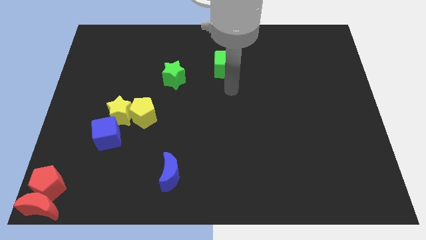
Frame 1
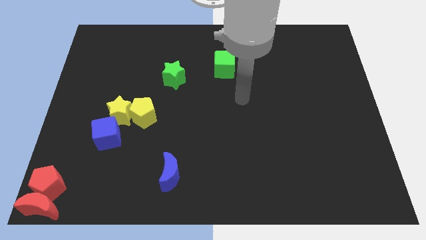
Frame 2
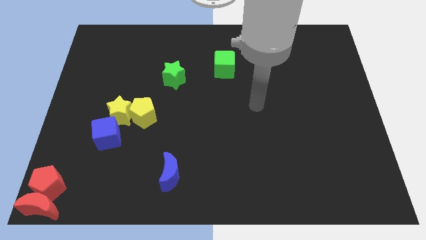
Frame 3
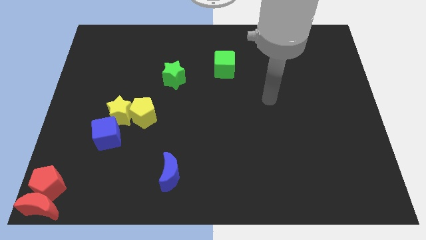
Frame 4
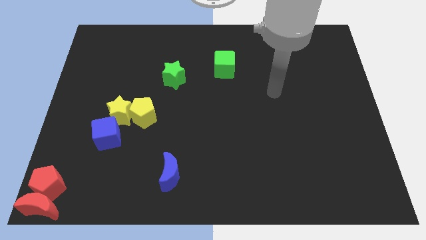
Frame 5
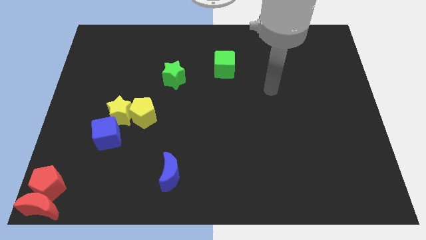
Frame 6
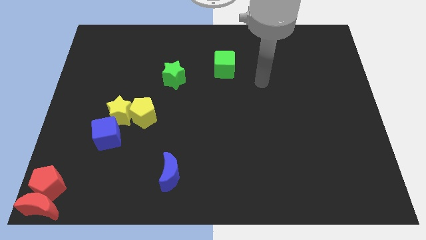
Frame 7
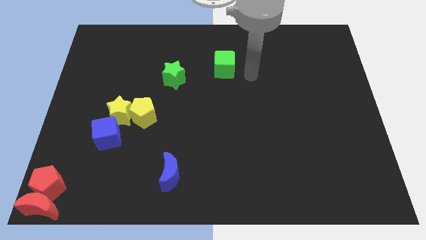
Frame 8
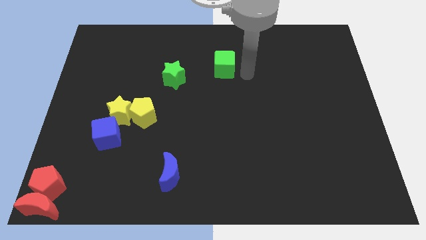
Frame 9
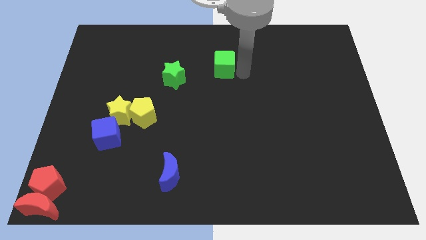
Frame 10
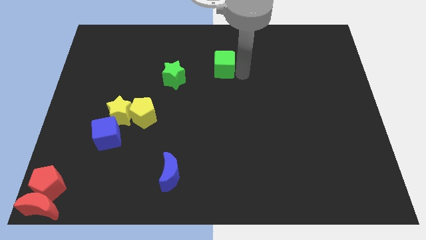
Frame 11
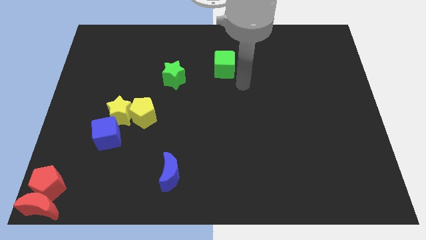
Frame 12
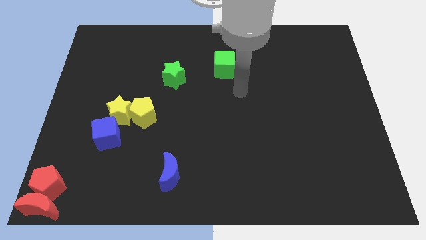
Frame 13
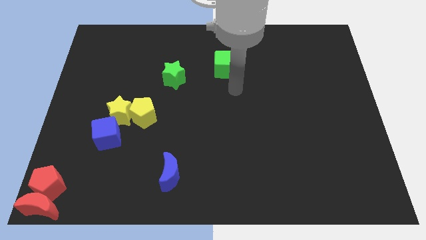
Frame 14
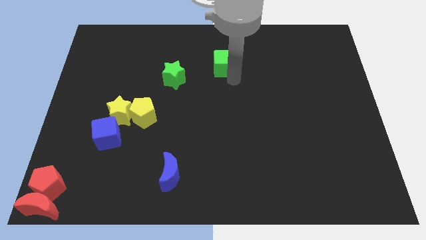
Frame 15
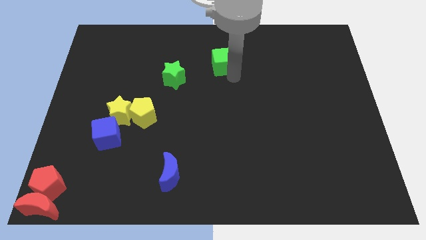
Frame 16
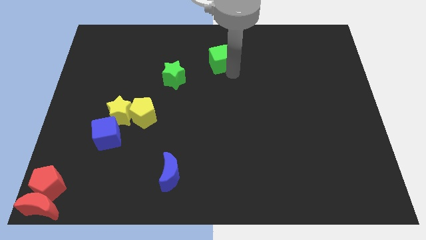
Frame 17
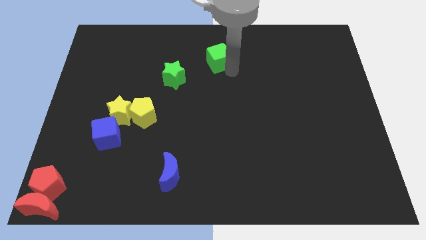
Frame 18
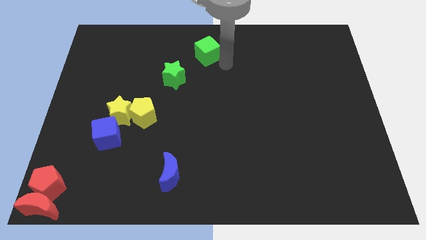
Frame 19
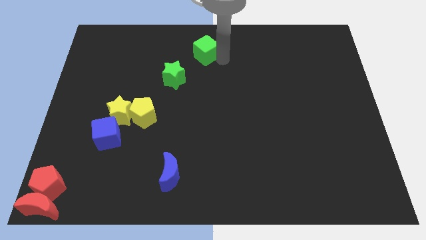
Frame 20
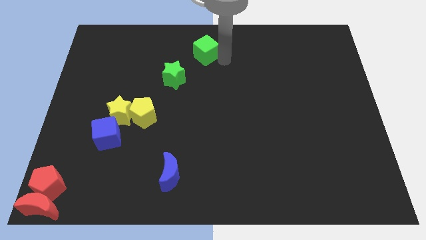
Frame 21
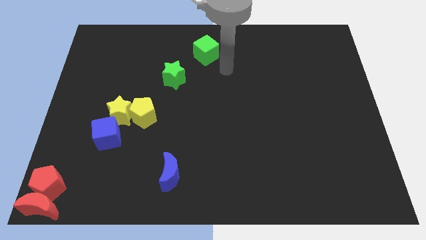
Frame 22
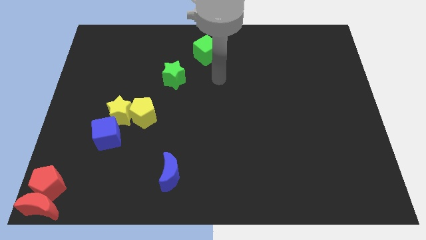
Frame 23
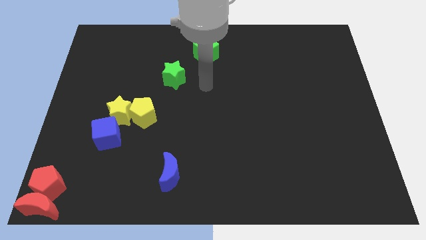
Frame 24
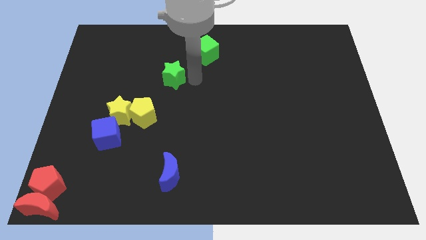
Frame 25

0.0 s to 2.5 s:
push the green cube to the top center

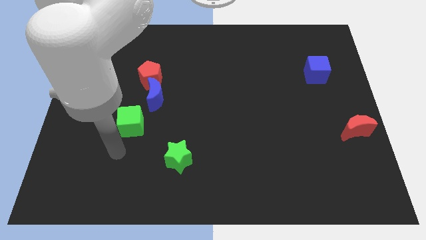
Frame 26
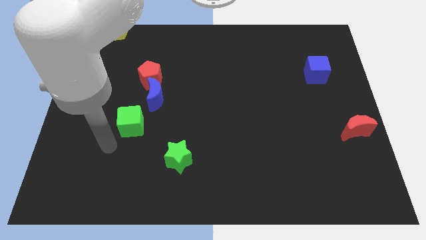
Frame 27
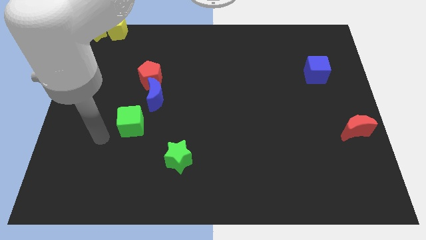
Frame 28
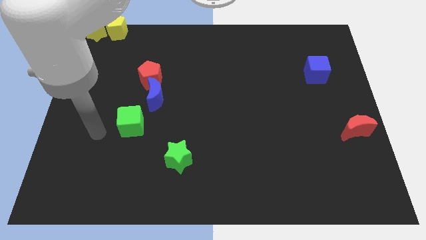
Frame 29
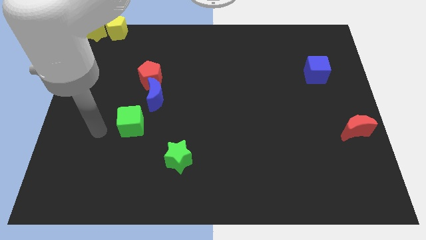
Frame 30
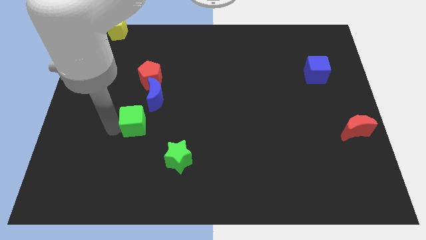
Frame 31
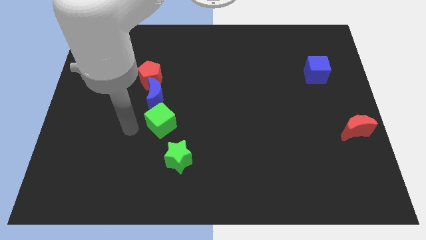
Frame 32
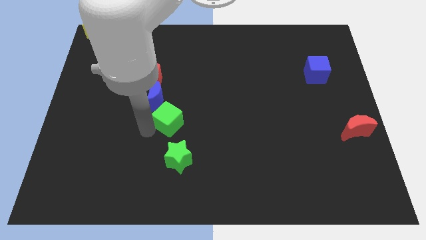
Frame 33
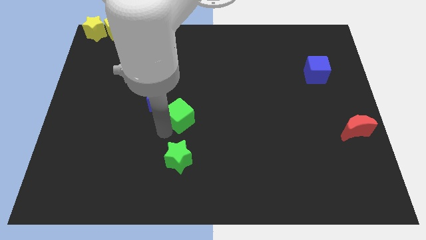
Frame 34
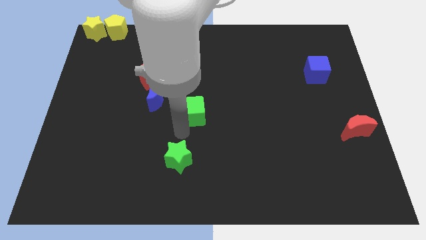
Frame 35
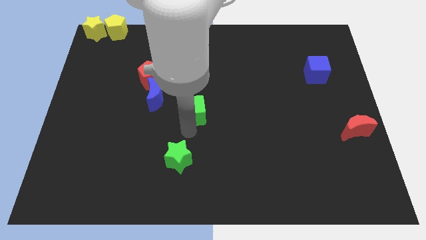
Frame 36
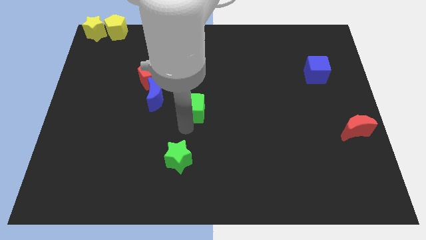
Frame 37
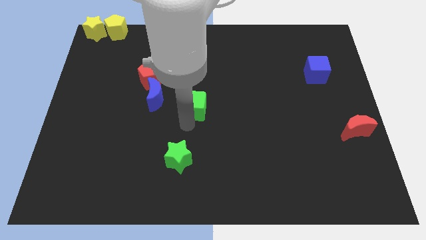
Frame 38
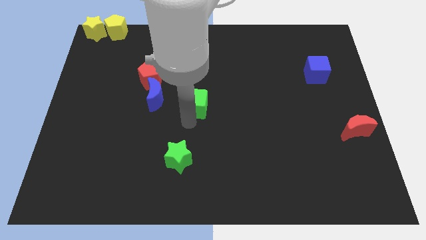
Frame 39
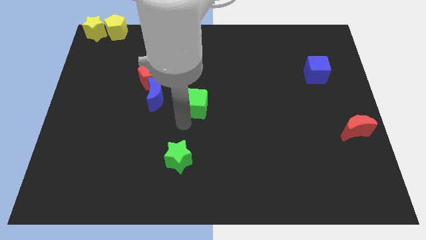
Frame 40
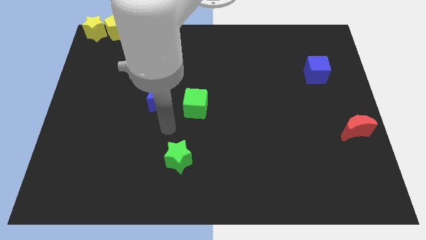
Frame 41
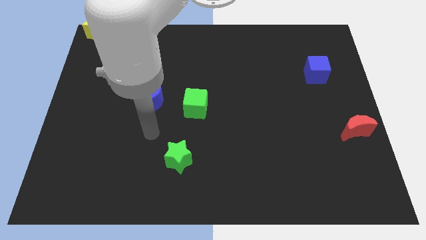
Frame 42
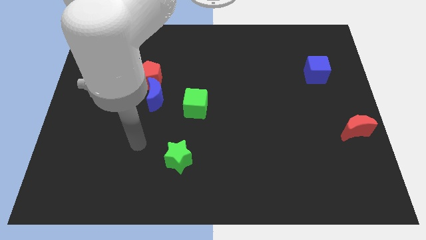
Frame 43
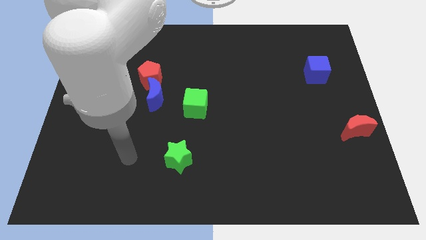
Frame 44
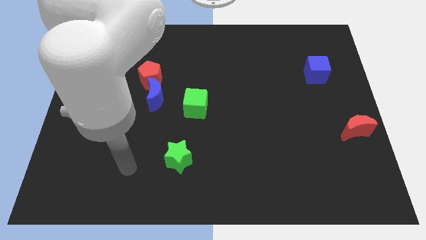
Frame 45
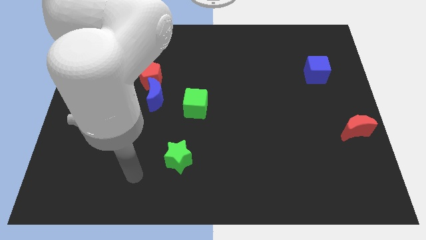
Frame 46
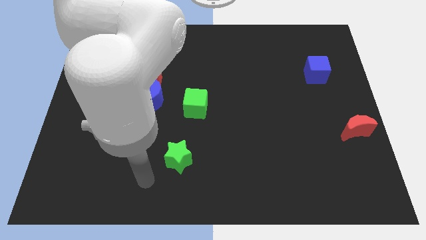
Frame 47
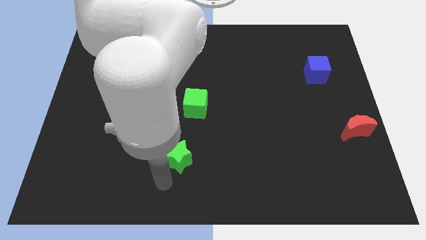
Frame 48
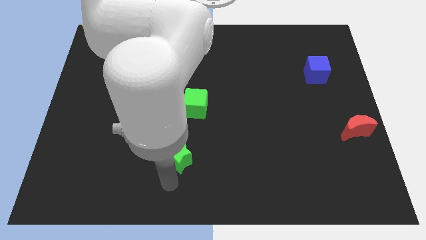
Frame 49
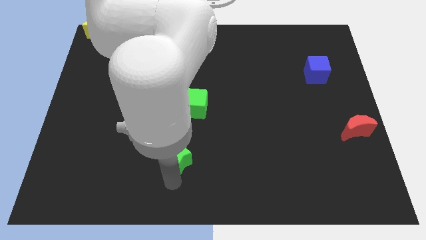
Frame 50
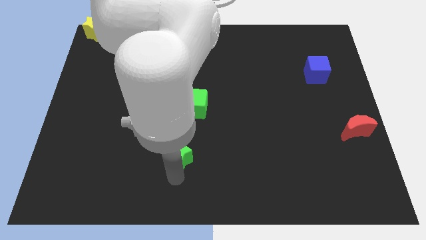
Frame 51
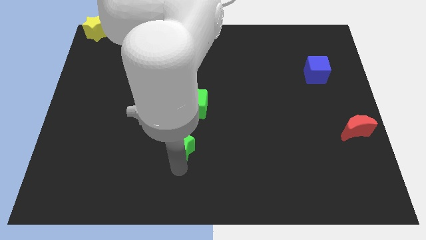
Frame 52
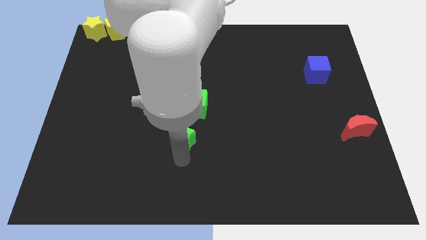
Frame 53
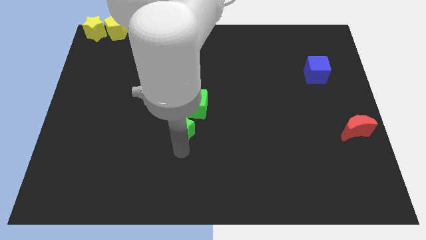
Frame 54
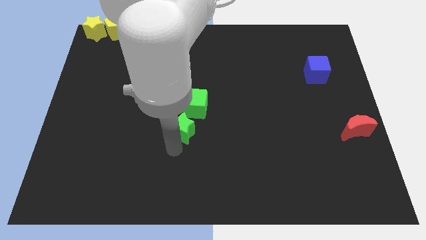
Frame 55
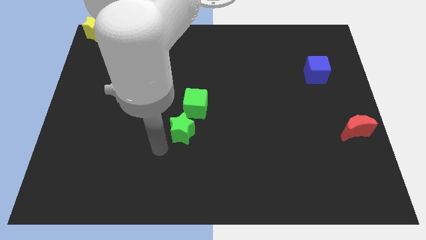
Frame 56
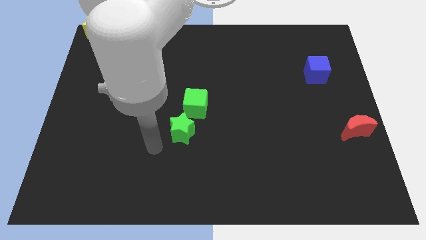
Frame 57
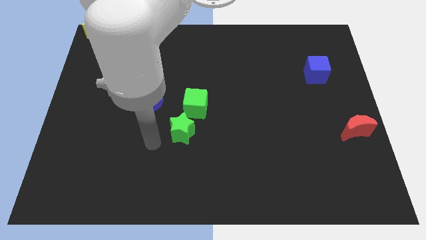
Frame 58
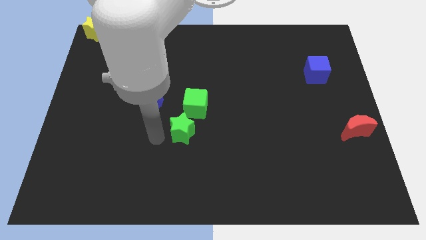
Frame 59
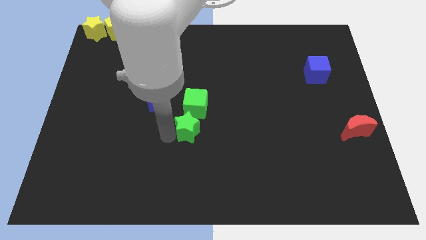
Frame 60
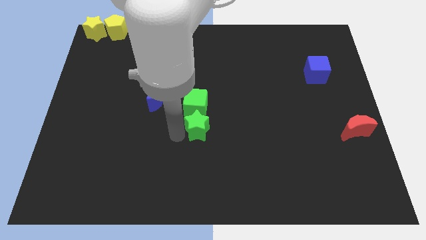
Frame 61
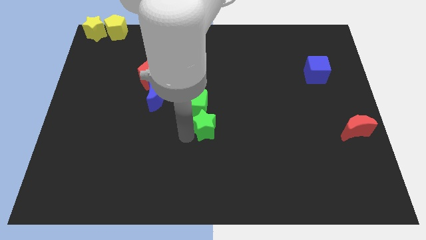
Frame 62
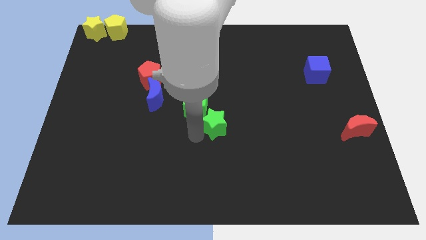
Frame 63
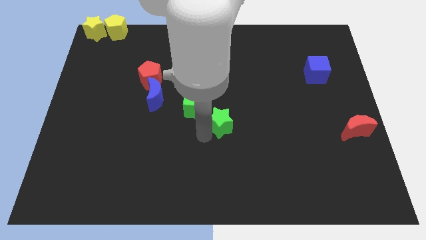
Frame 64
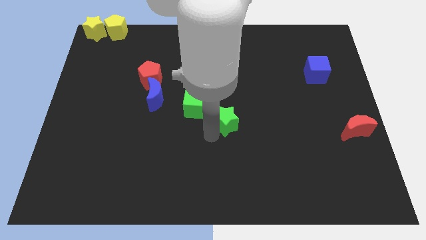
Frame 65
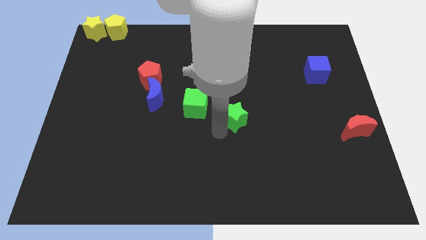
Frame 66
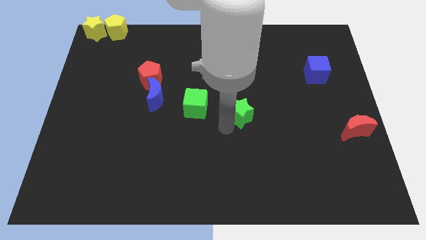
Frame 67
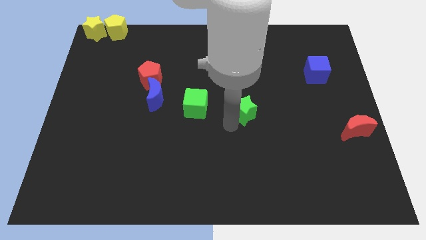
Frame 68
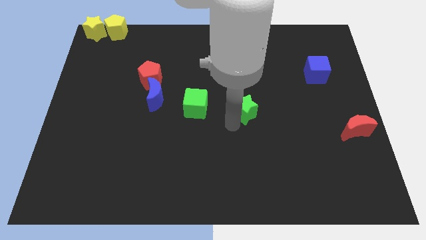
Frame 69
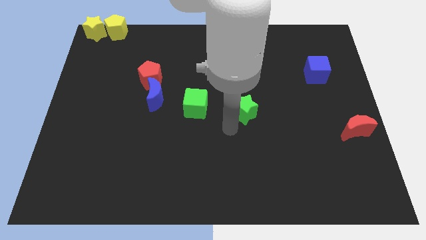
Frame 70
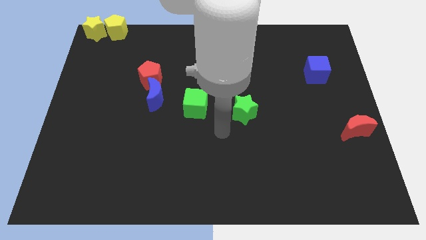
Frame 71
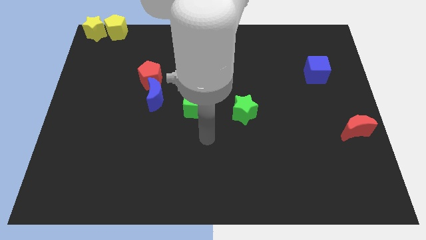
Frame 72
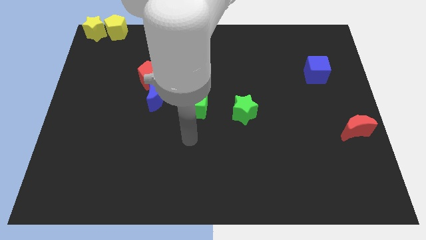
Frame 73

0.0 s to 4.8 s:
place the green blocks to the center of the board

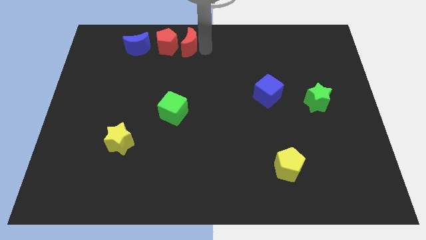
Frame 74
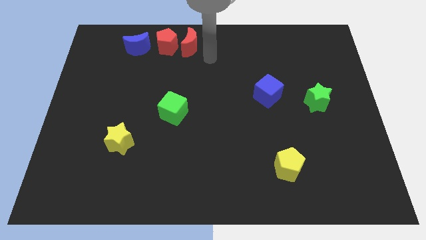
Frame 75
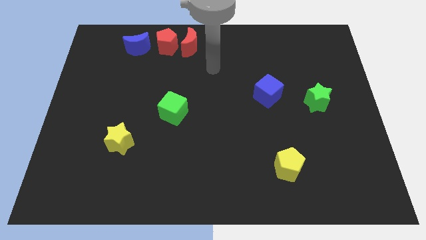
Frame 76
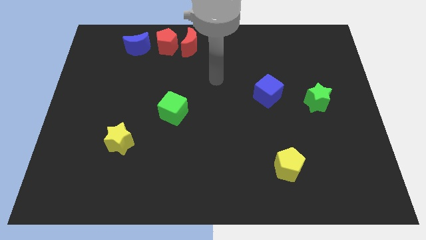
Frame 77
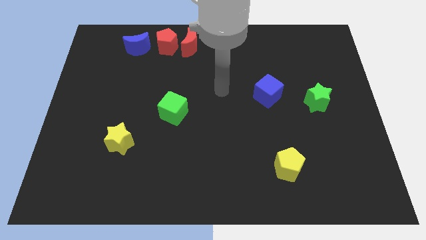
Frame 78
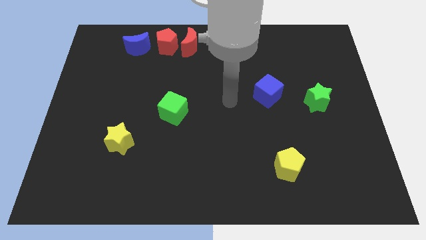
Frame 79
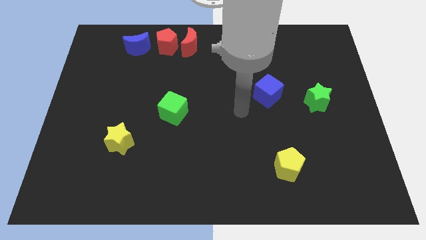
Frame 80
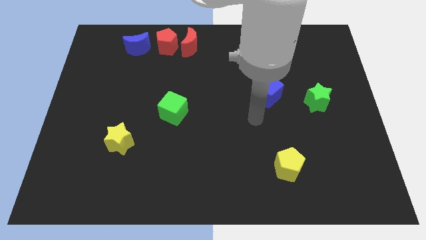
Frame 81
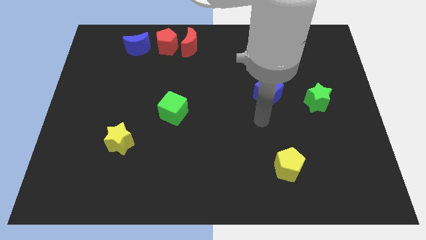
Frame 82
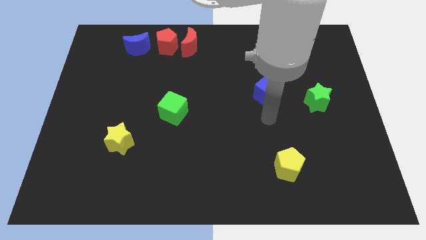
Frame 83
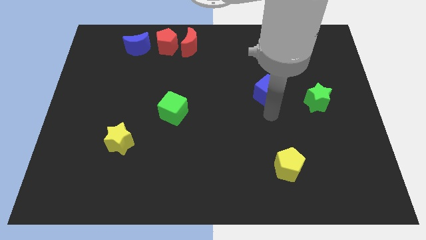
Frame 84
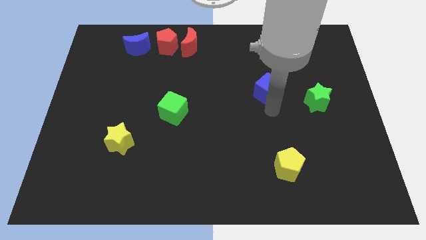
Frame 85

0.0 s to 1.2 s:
move your arm to the bottom of the blue cube

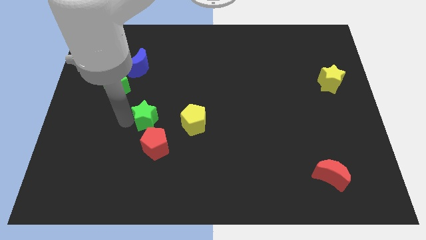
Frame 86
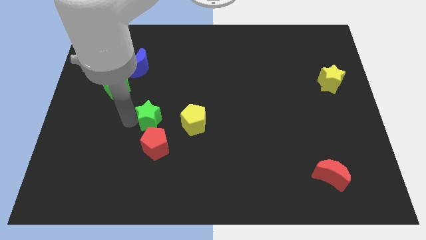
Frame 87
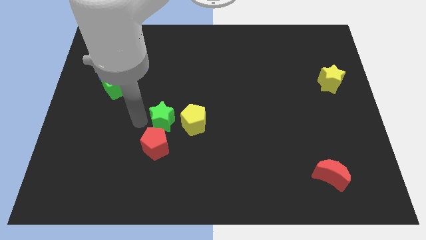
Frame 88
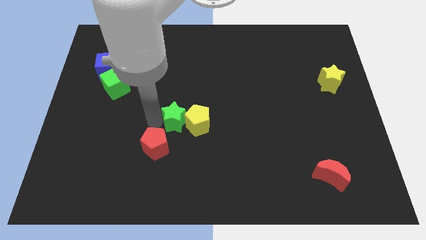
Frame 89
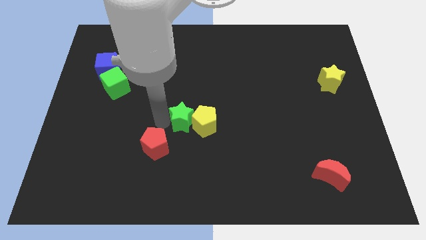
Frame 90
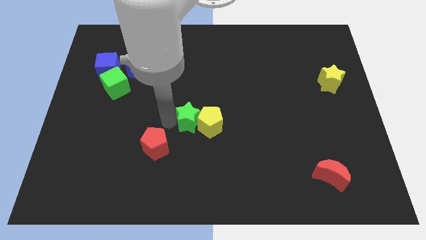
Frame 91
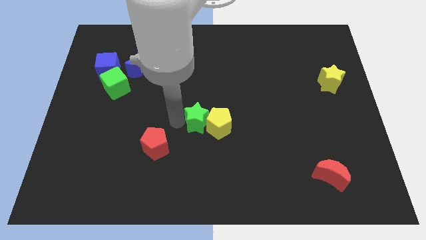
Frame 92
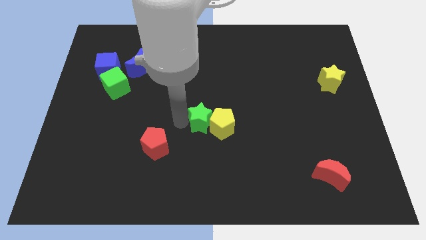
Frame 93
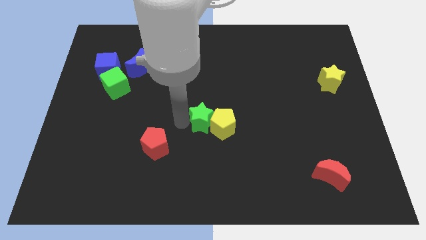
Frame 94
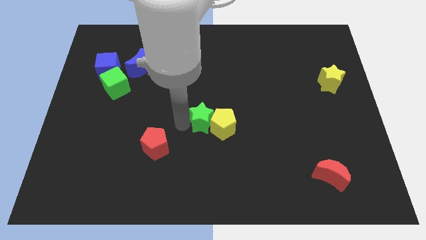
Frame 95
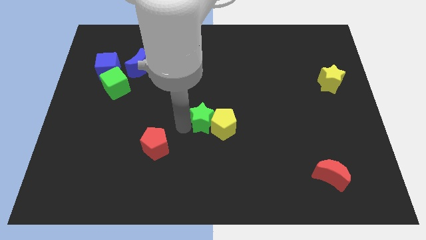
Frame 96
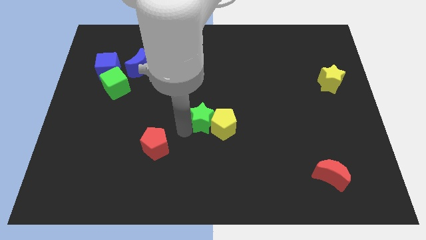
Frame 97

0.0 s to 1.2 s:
push the green star to the center towards right along with the yellow pentagon
